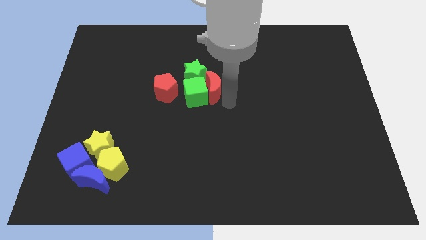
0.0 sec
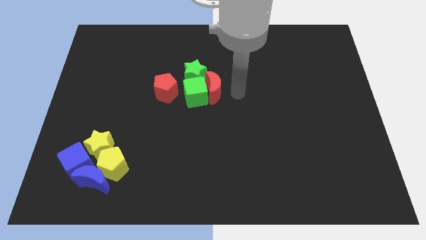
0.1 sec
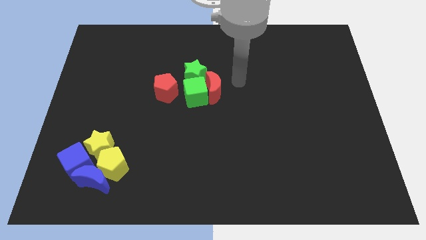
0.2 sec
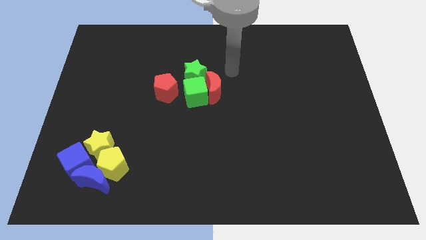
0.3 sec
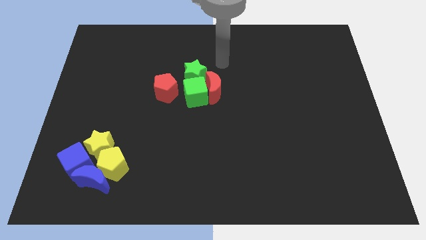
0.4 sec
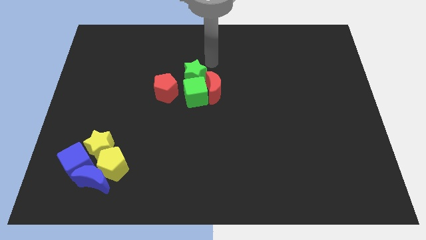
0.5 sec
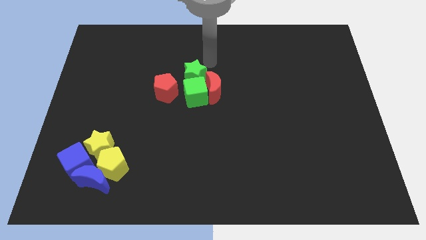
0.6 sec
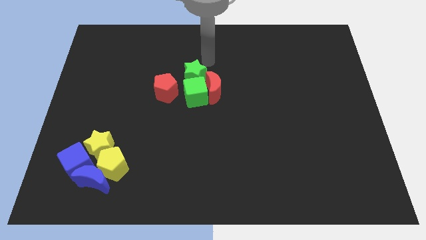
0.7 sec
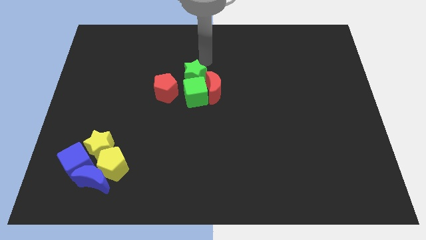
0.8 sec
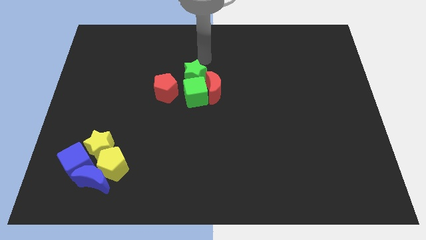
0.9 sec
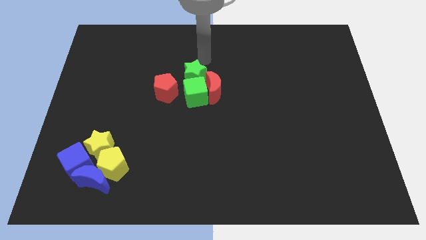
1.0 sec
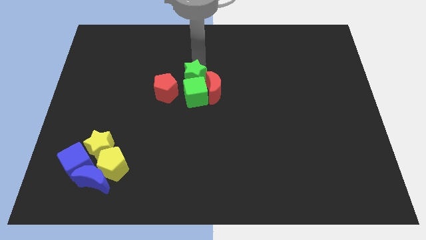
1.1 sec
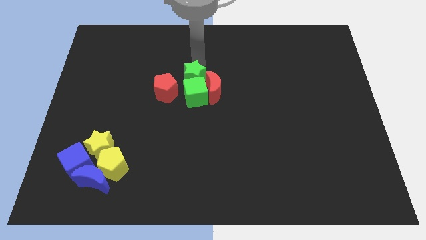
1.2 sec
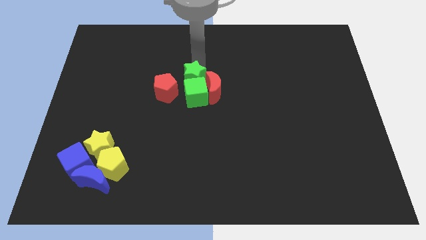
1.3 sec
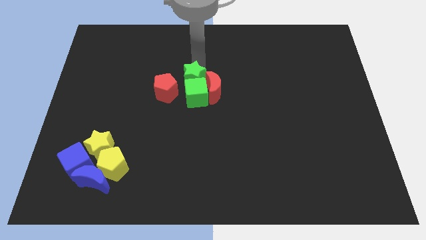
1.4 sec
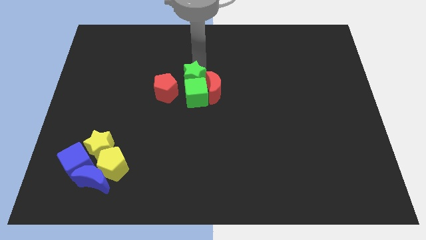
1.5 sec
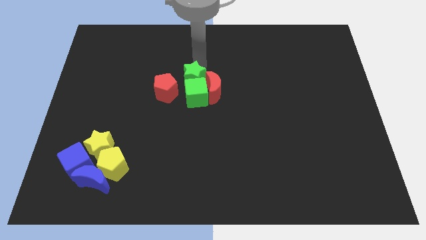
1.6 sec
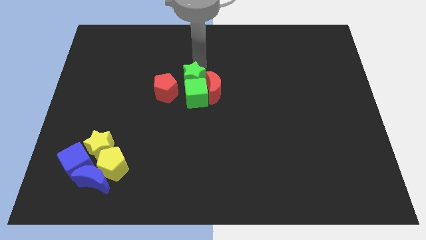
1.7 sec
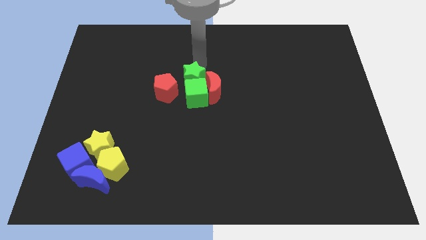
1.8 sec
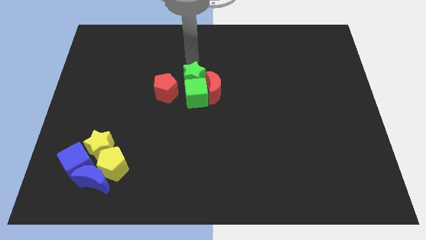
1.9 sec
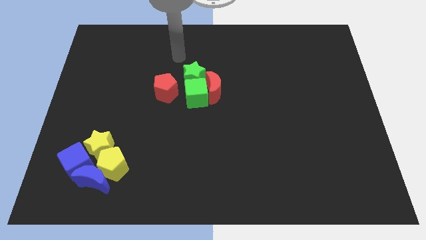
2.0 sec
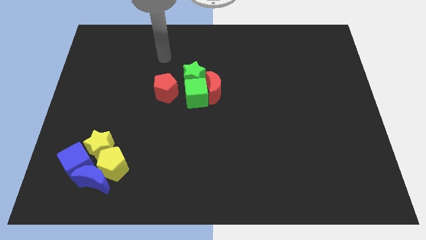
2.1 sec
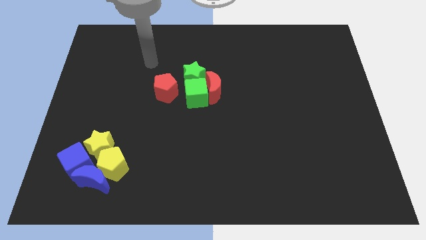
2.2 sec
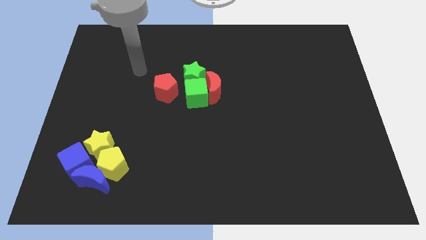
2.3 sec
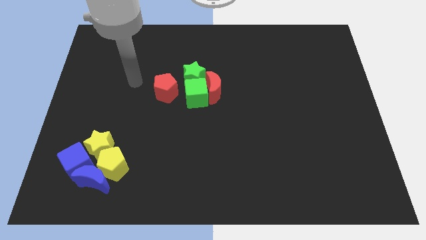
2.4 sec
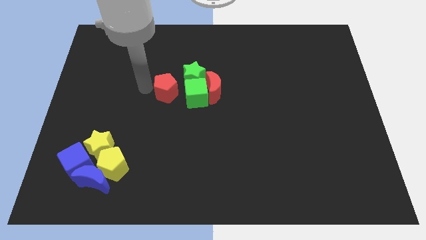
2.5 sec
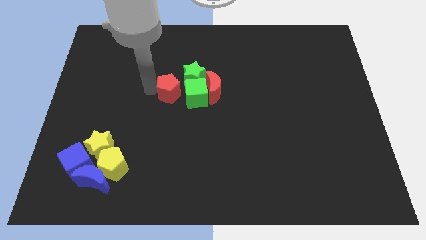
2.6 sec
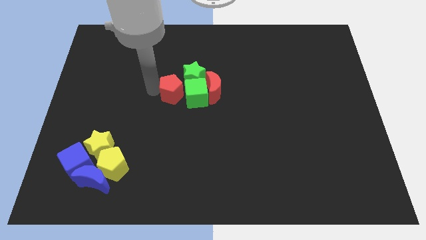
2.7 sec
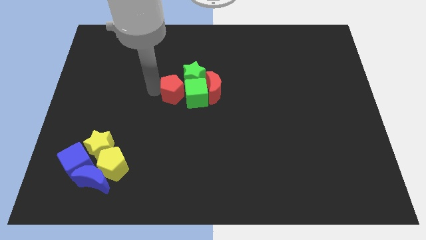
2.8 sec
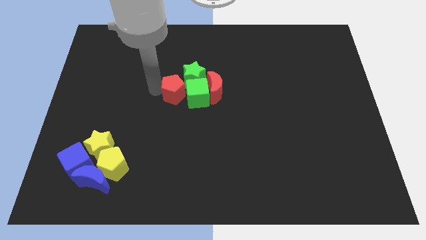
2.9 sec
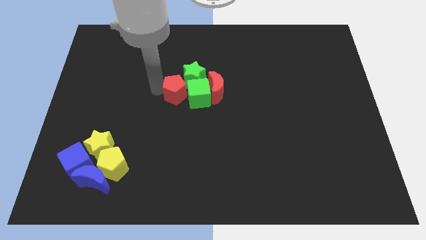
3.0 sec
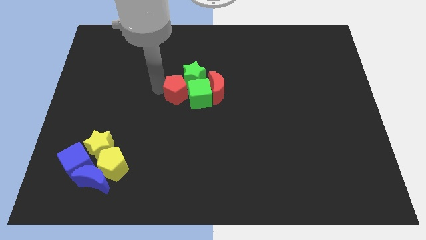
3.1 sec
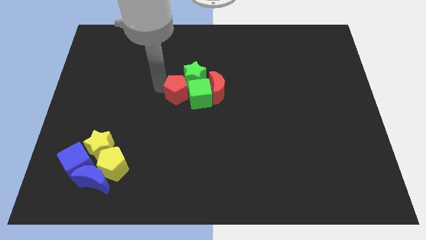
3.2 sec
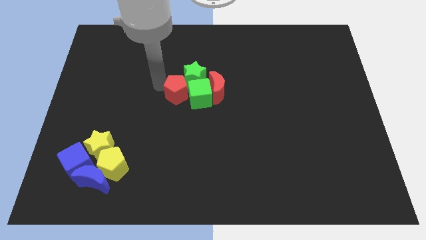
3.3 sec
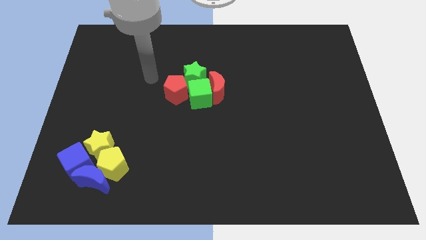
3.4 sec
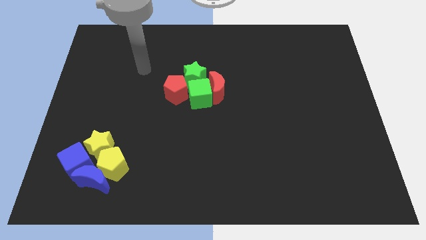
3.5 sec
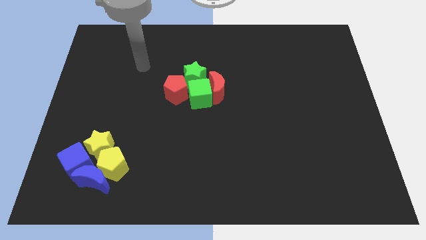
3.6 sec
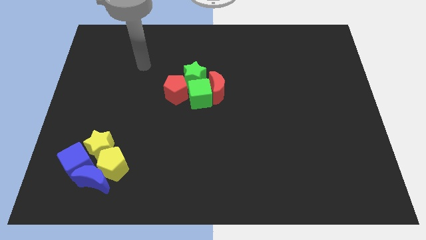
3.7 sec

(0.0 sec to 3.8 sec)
push the red pentagon into the left side of the green blocks

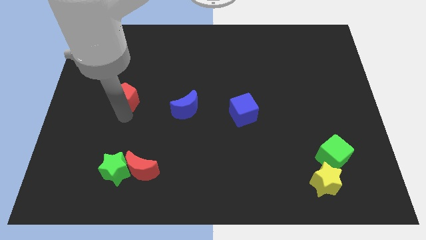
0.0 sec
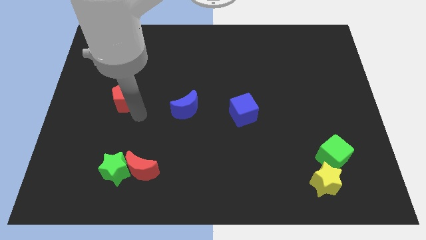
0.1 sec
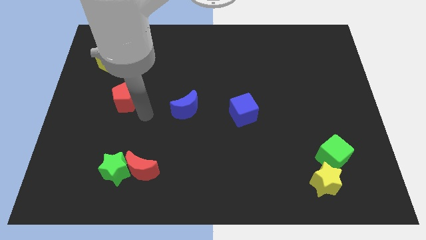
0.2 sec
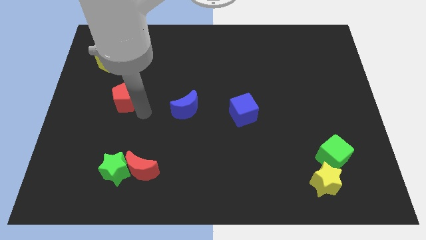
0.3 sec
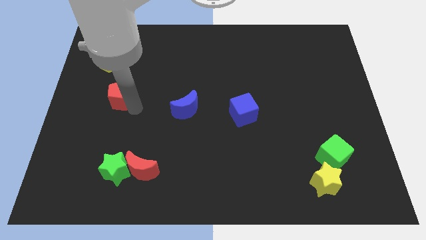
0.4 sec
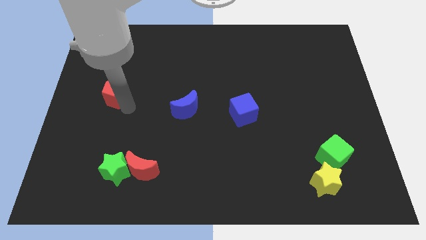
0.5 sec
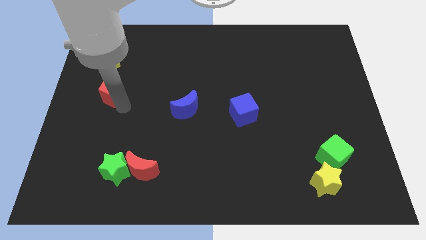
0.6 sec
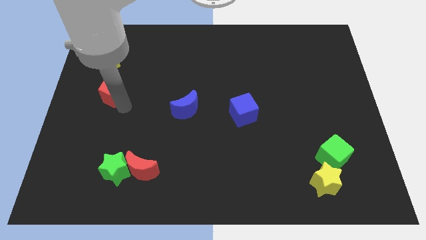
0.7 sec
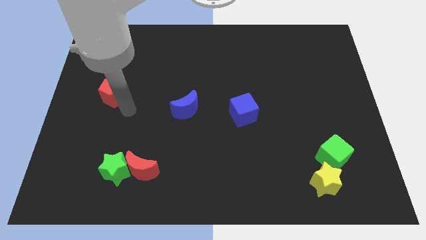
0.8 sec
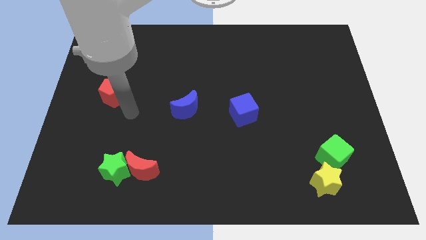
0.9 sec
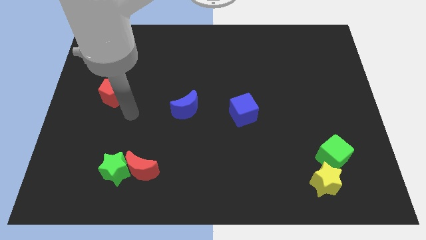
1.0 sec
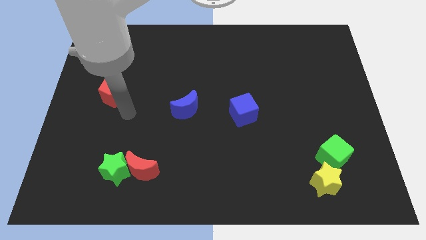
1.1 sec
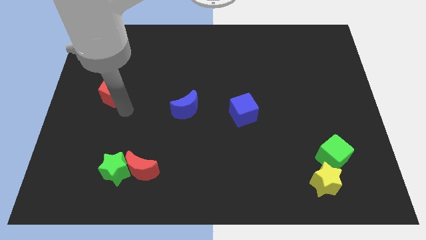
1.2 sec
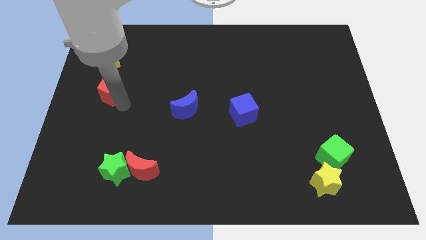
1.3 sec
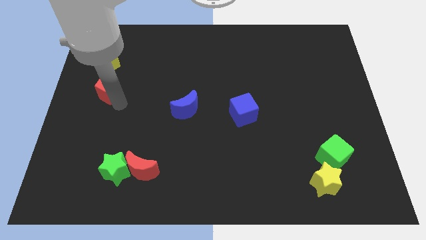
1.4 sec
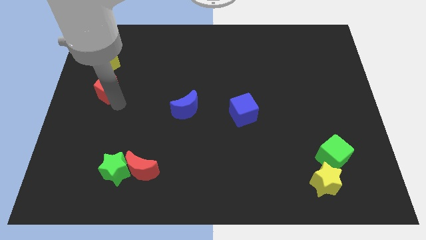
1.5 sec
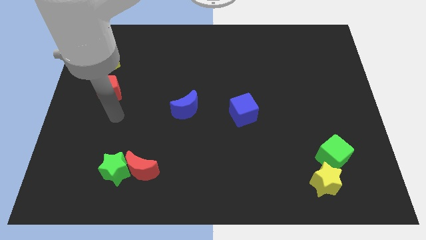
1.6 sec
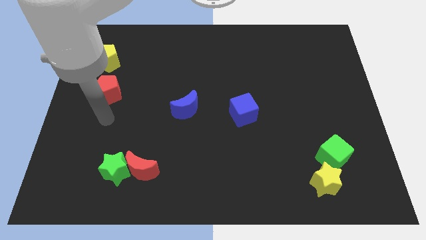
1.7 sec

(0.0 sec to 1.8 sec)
put the red pentagon below the yellow pentagon

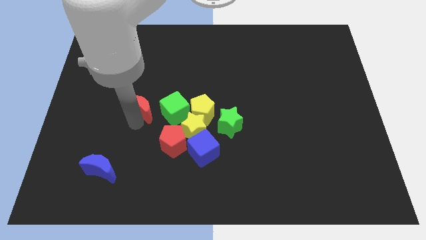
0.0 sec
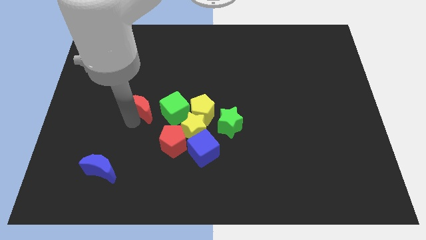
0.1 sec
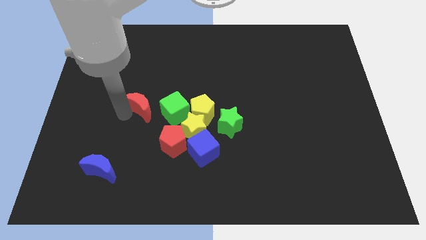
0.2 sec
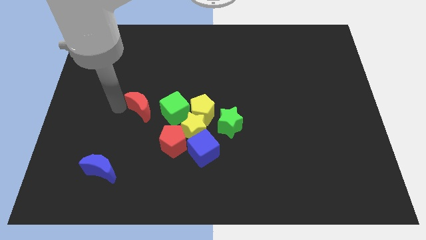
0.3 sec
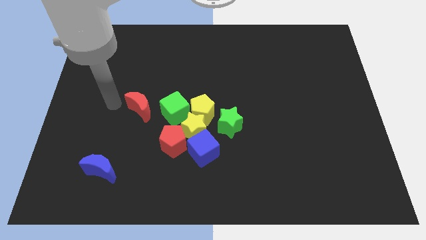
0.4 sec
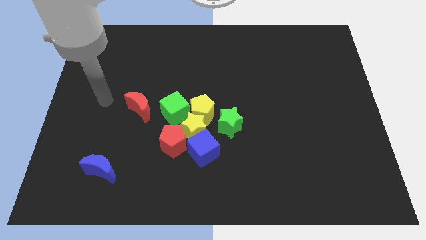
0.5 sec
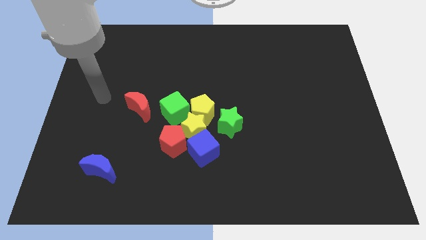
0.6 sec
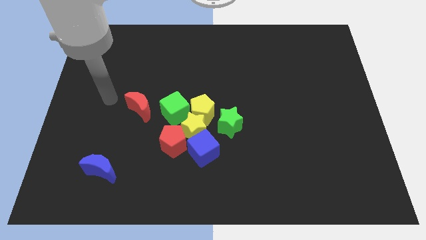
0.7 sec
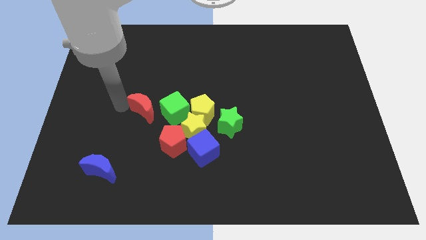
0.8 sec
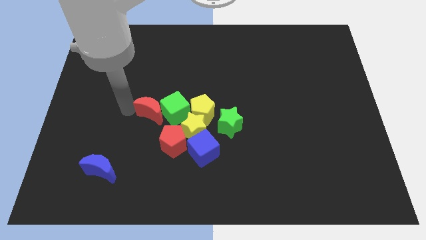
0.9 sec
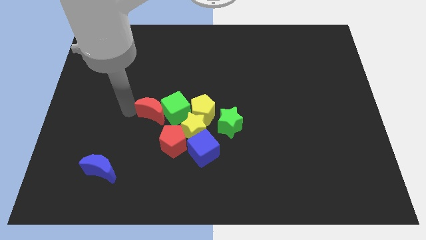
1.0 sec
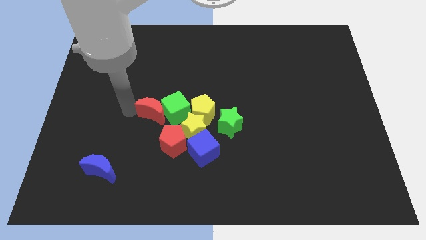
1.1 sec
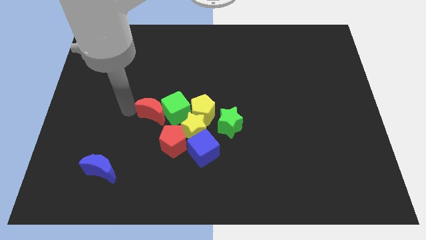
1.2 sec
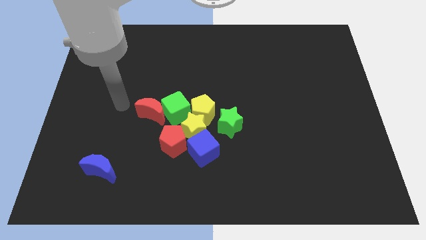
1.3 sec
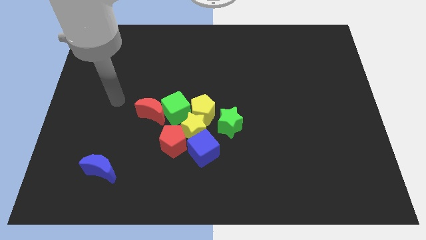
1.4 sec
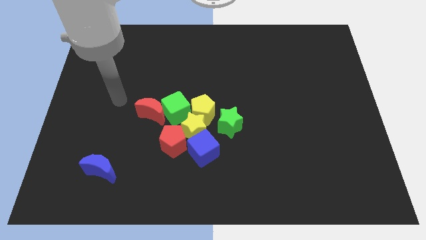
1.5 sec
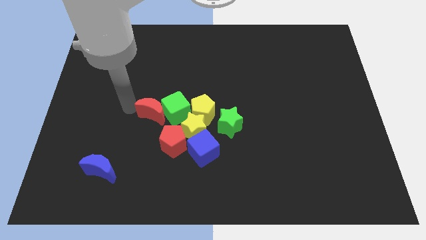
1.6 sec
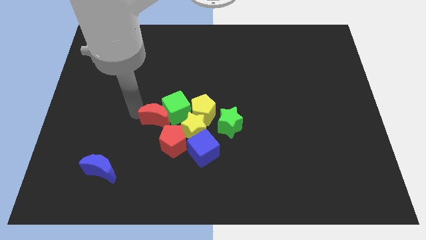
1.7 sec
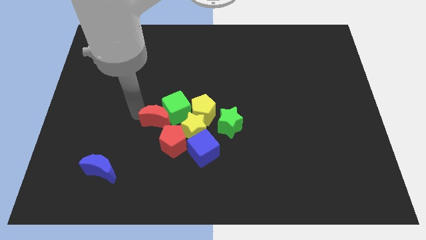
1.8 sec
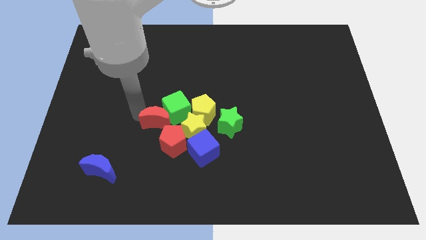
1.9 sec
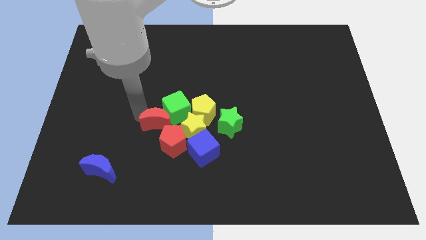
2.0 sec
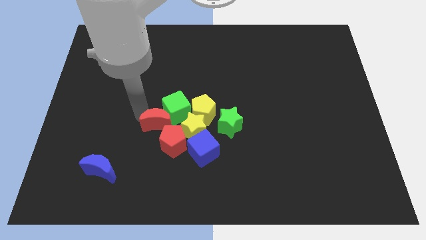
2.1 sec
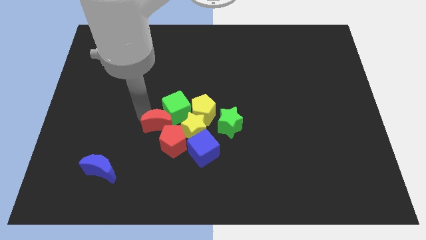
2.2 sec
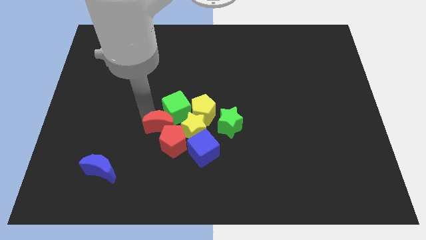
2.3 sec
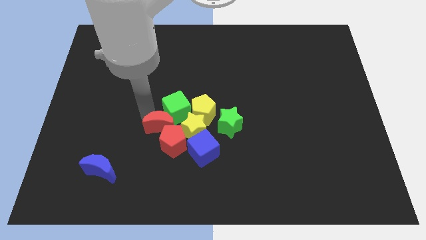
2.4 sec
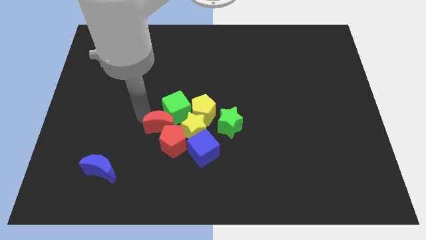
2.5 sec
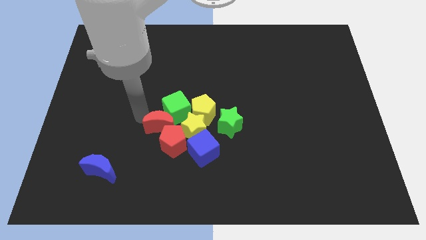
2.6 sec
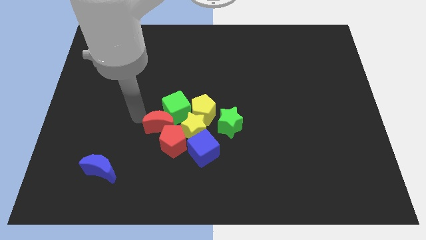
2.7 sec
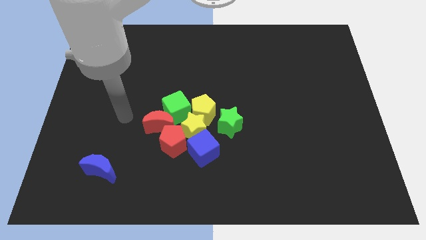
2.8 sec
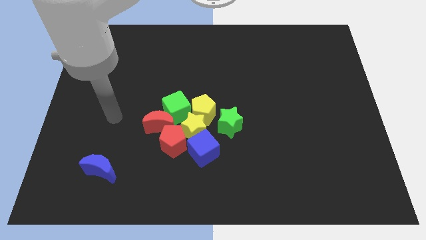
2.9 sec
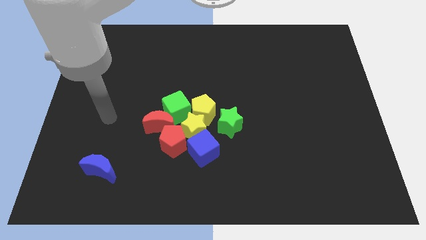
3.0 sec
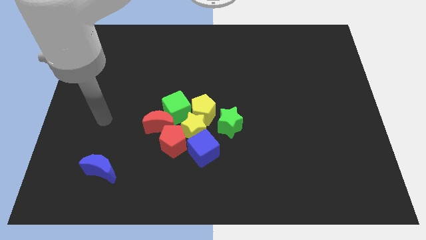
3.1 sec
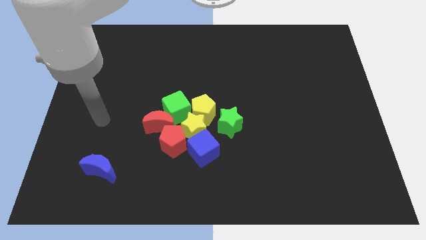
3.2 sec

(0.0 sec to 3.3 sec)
push red moon into group of blocks
